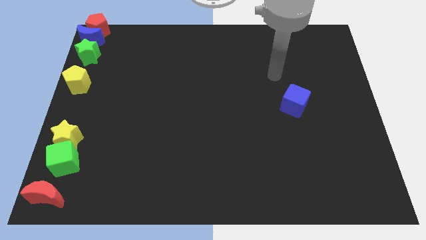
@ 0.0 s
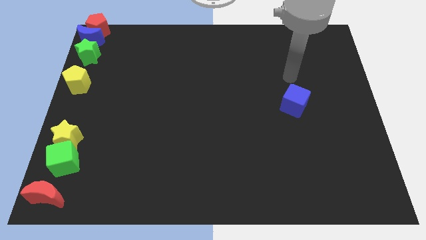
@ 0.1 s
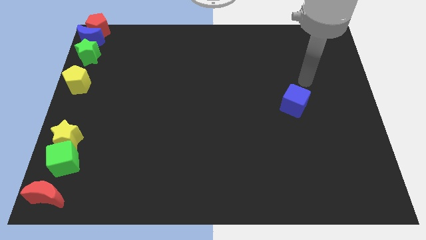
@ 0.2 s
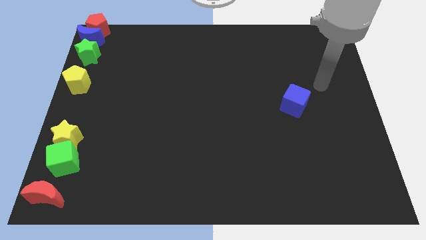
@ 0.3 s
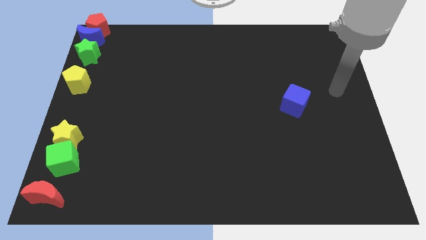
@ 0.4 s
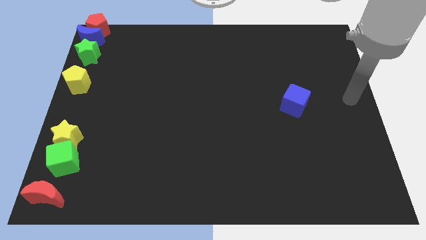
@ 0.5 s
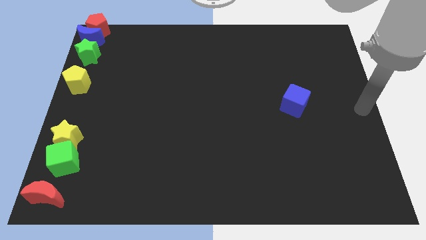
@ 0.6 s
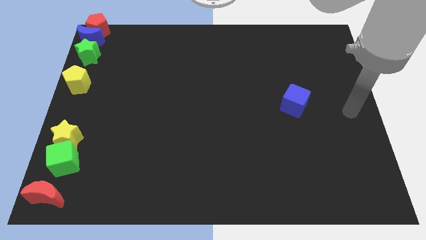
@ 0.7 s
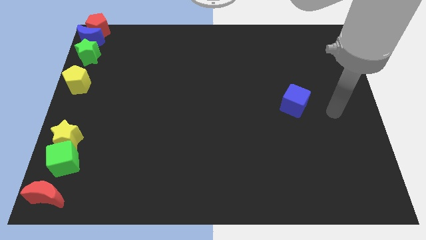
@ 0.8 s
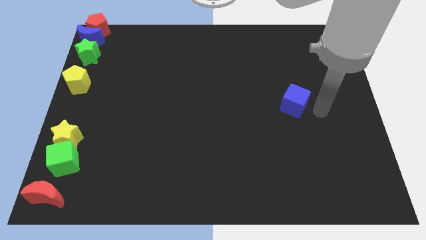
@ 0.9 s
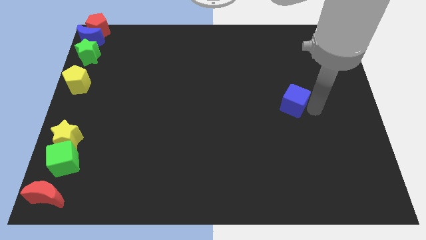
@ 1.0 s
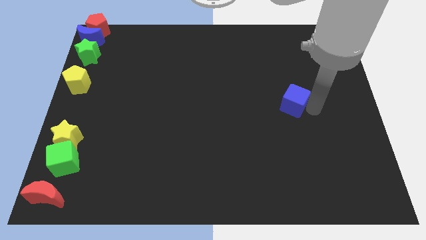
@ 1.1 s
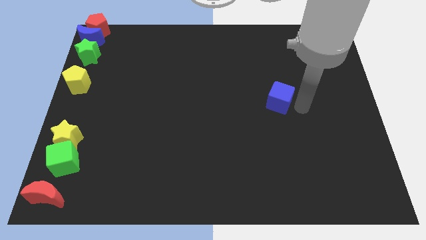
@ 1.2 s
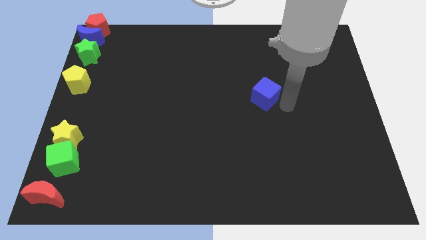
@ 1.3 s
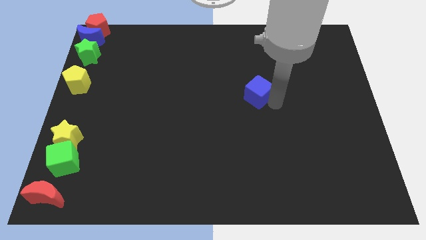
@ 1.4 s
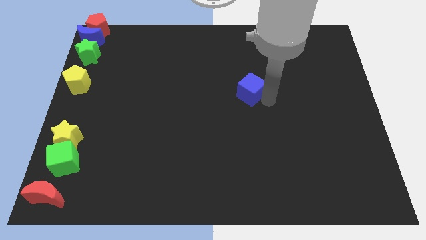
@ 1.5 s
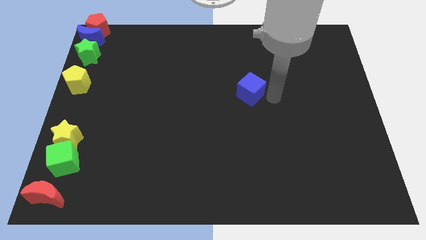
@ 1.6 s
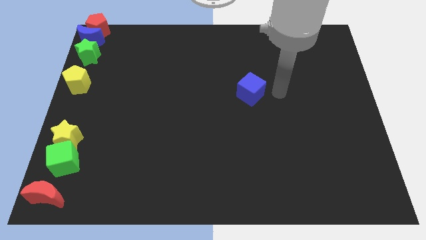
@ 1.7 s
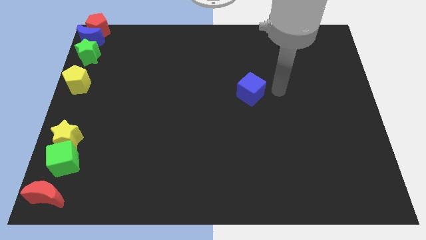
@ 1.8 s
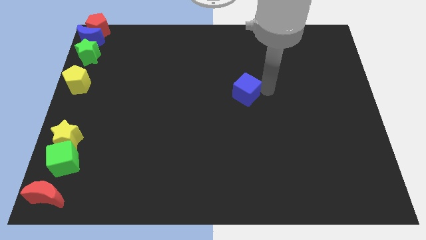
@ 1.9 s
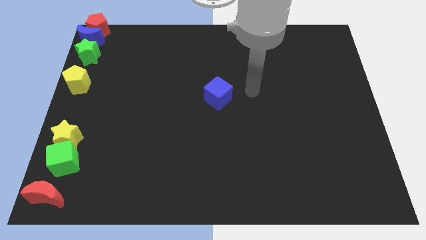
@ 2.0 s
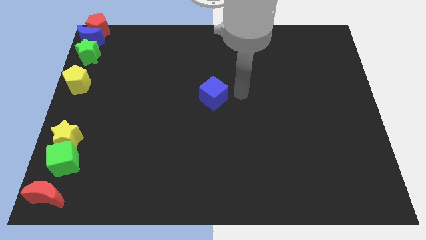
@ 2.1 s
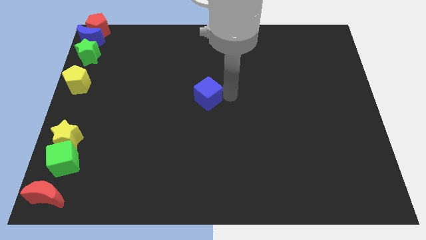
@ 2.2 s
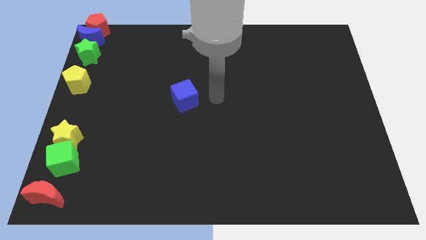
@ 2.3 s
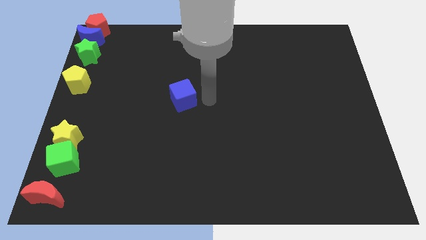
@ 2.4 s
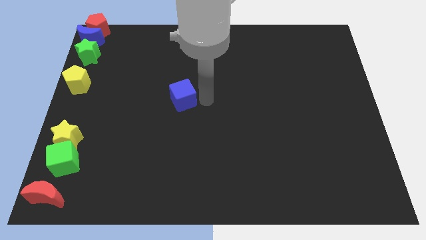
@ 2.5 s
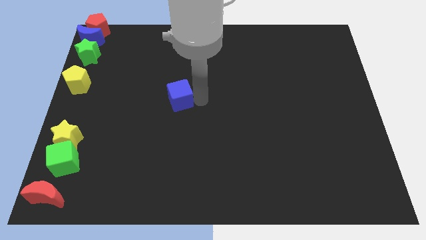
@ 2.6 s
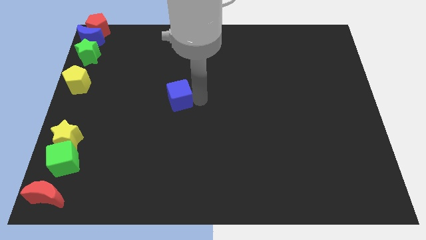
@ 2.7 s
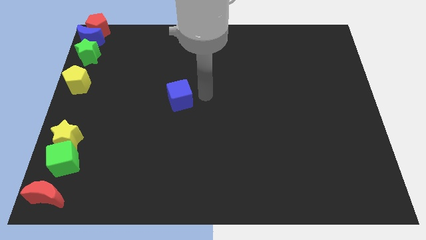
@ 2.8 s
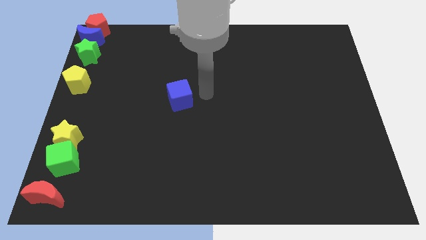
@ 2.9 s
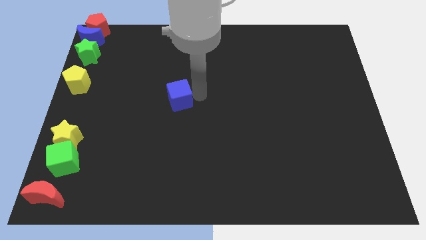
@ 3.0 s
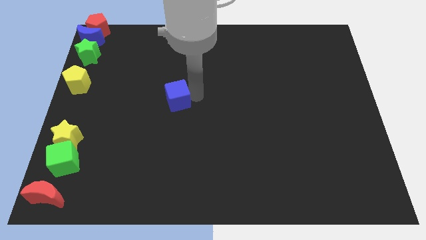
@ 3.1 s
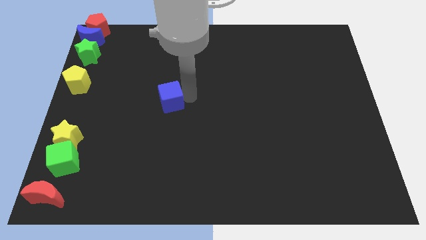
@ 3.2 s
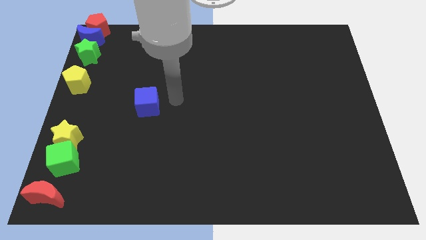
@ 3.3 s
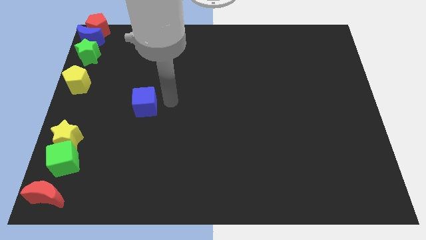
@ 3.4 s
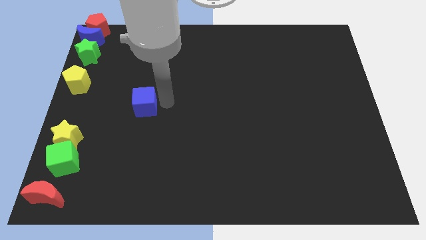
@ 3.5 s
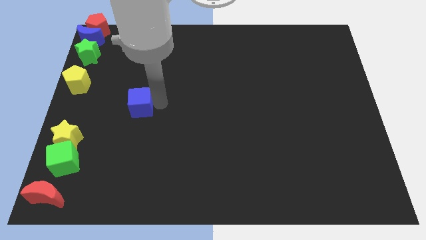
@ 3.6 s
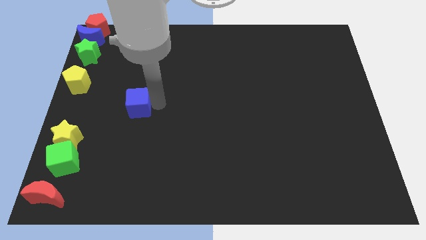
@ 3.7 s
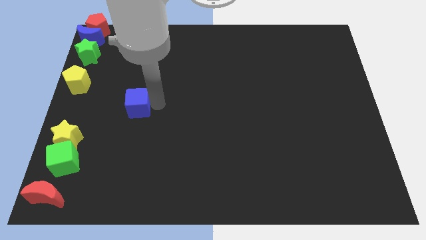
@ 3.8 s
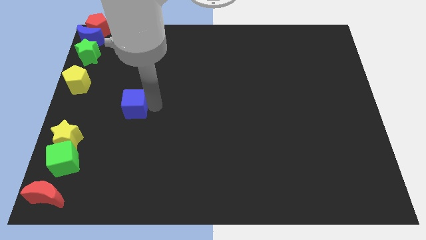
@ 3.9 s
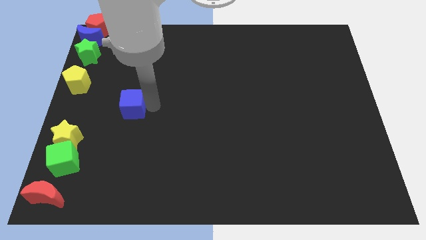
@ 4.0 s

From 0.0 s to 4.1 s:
push the blue cube to the left side of the board

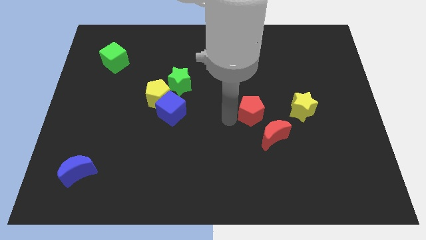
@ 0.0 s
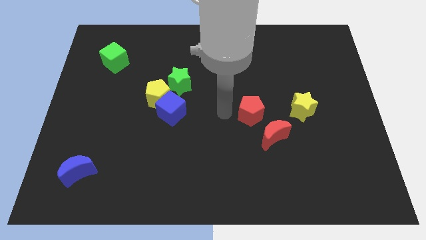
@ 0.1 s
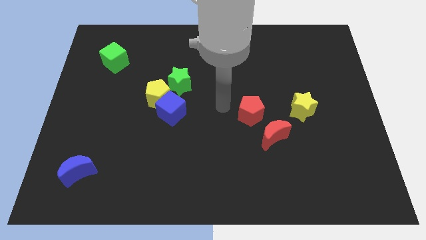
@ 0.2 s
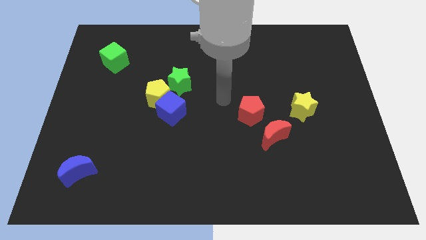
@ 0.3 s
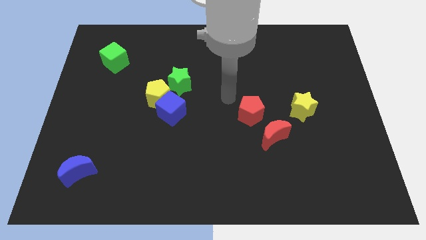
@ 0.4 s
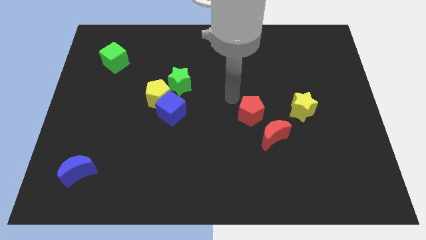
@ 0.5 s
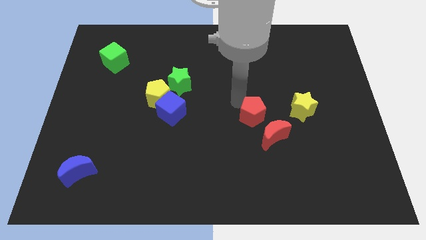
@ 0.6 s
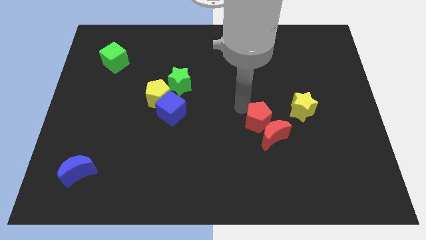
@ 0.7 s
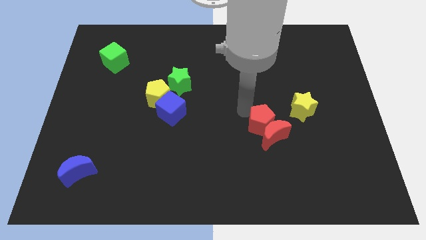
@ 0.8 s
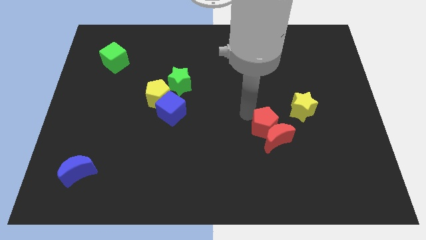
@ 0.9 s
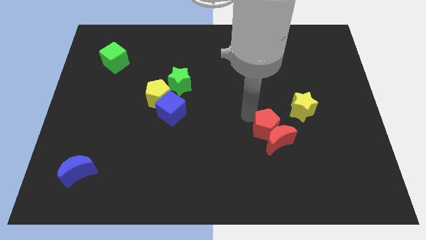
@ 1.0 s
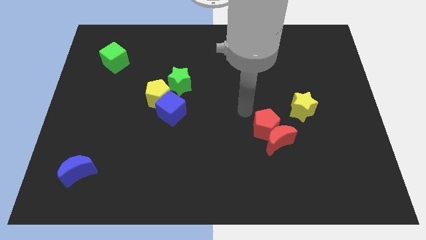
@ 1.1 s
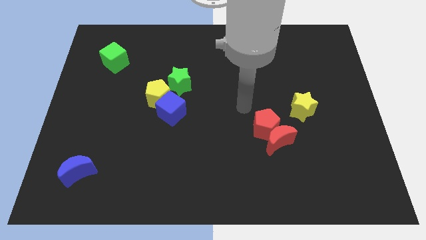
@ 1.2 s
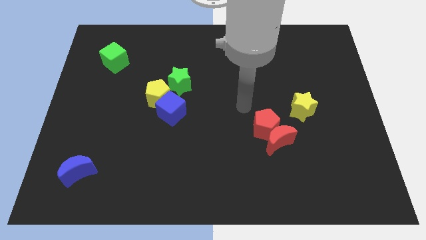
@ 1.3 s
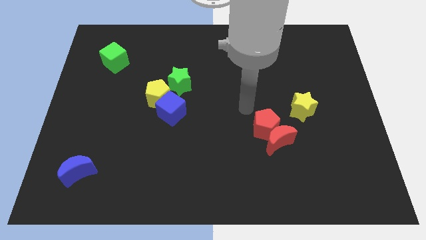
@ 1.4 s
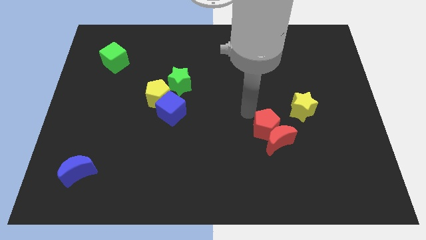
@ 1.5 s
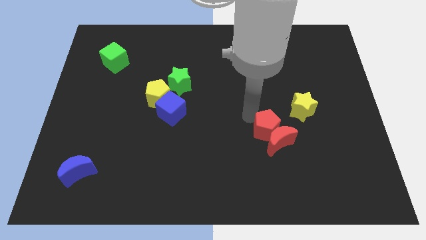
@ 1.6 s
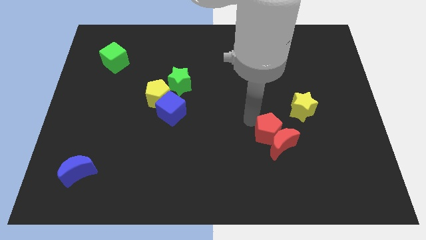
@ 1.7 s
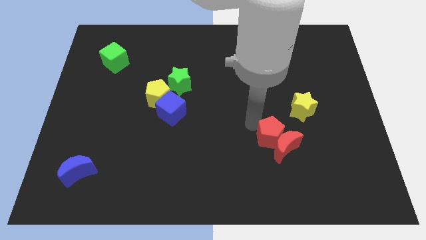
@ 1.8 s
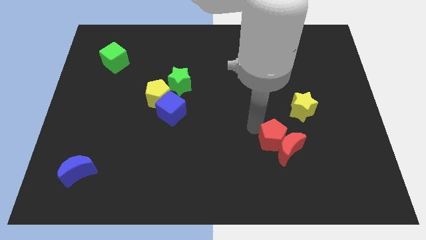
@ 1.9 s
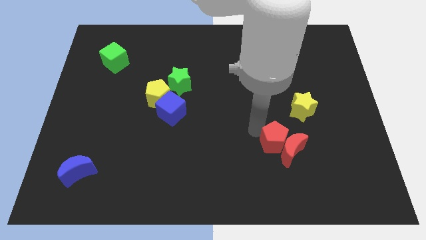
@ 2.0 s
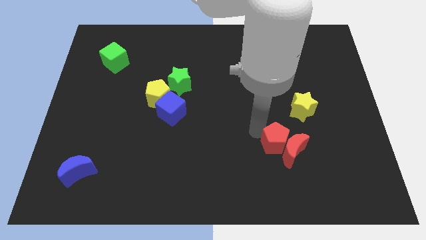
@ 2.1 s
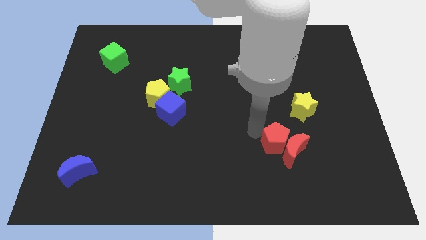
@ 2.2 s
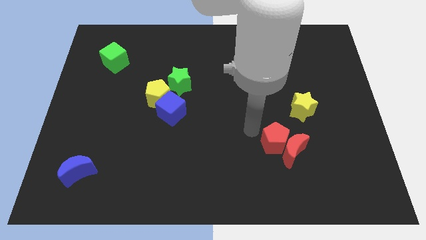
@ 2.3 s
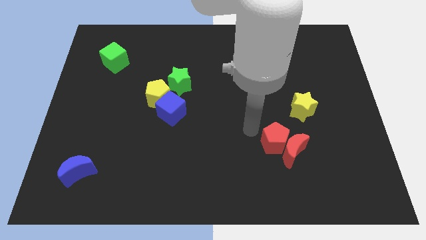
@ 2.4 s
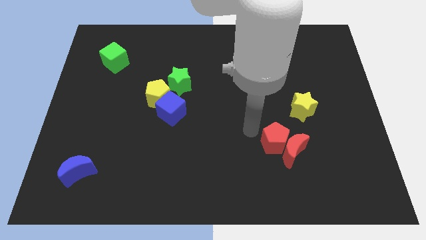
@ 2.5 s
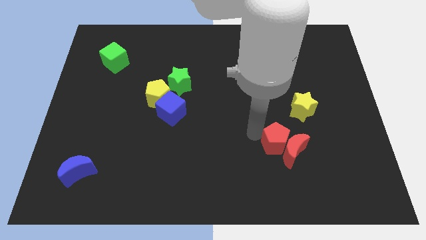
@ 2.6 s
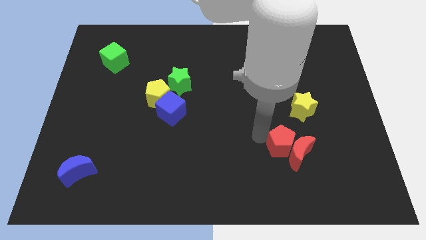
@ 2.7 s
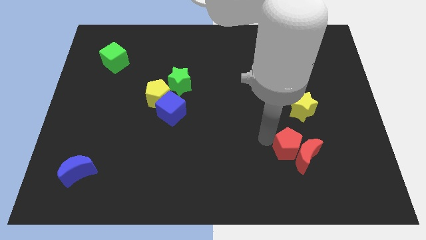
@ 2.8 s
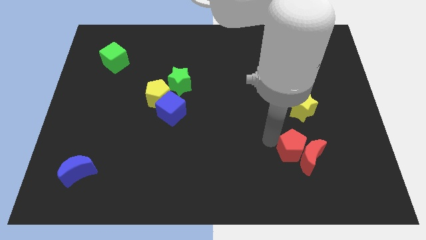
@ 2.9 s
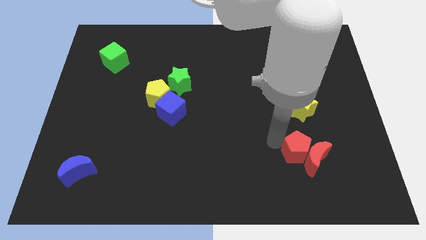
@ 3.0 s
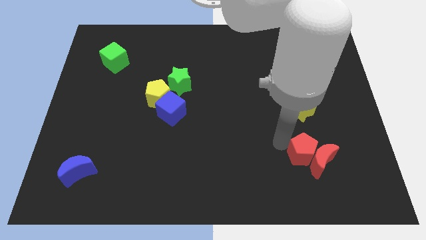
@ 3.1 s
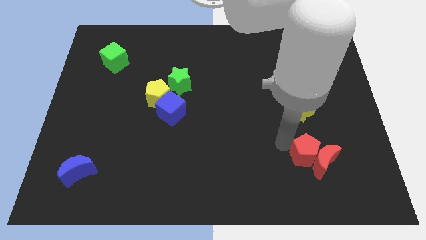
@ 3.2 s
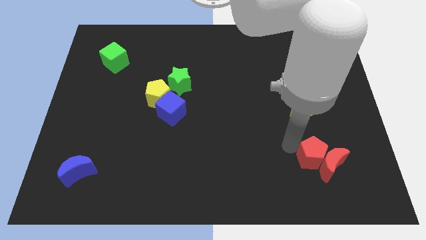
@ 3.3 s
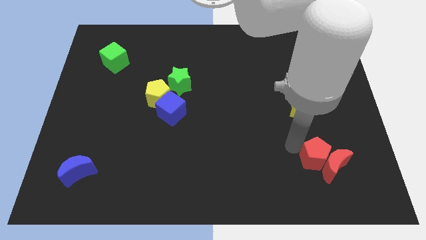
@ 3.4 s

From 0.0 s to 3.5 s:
slide the red blocks below the yellow star

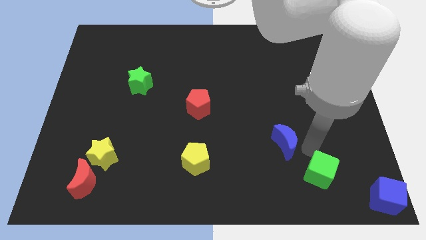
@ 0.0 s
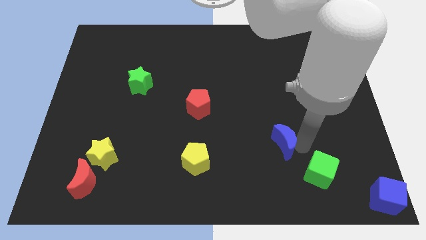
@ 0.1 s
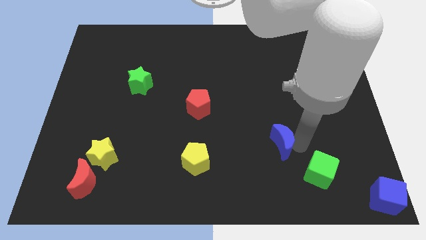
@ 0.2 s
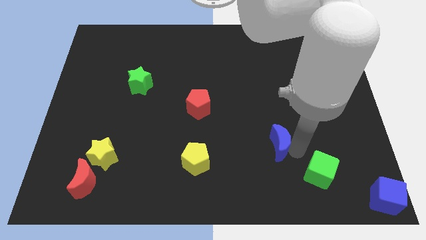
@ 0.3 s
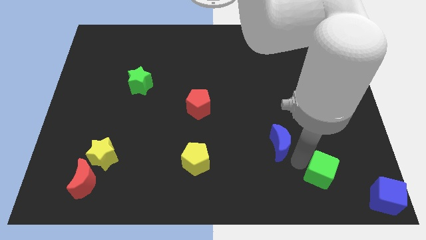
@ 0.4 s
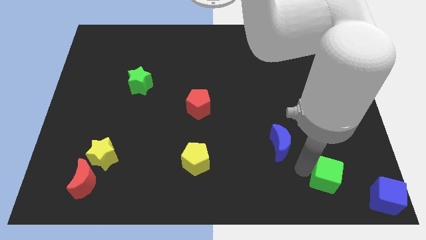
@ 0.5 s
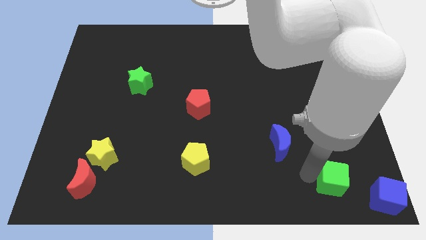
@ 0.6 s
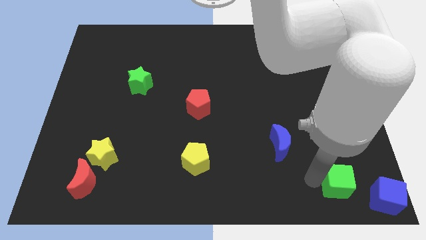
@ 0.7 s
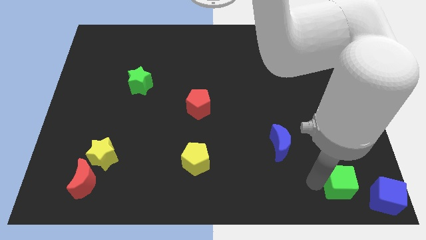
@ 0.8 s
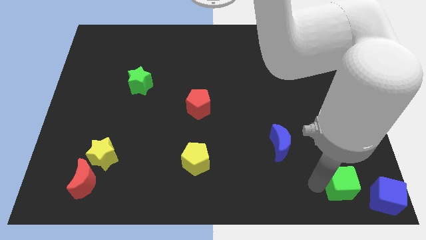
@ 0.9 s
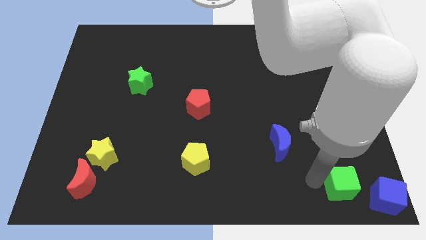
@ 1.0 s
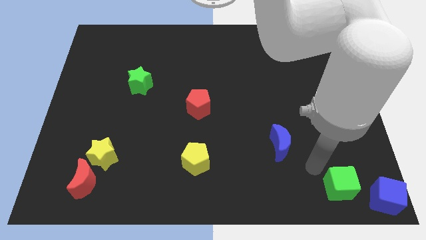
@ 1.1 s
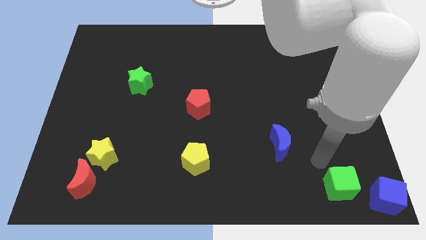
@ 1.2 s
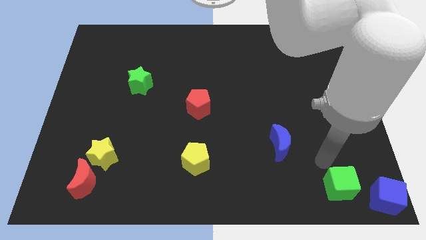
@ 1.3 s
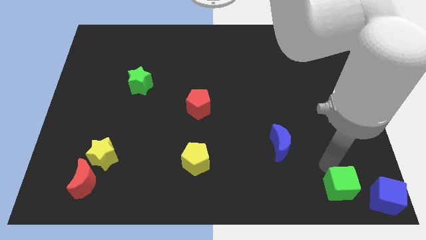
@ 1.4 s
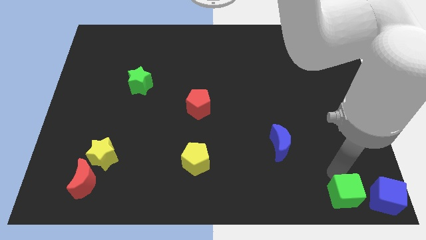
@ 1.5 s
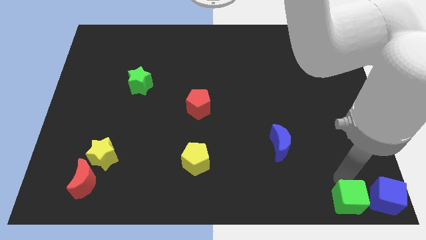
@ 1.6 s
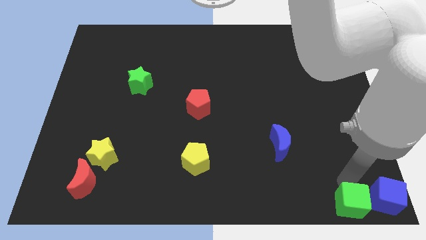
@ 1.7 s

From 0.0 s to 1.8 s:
move the green cube left to the blue cube
